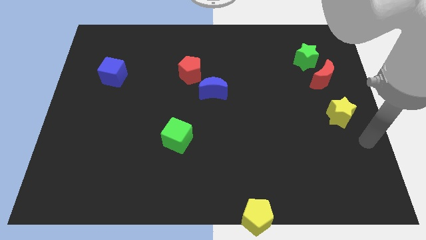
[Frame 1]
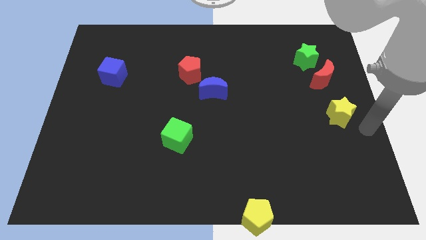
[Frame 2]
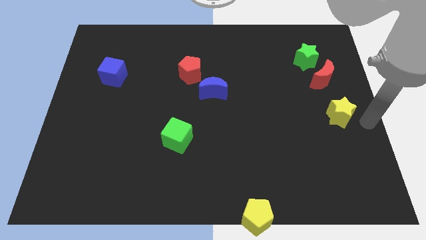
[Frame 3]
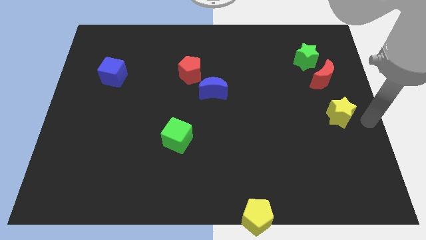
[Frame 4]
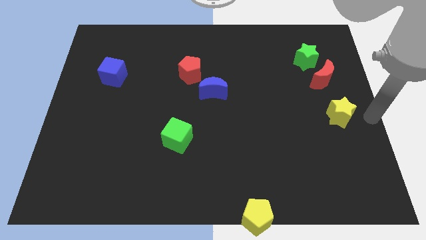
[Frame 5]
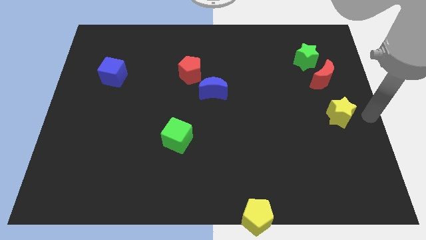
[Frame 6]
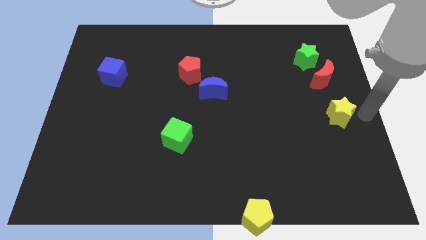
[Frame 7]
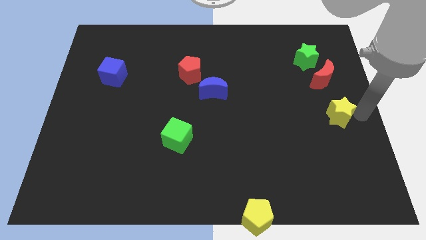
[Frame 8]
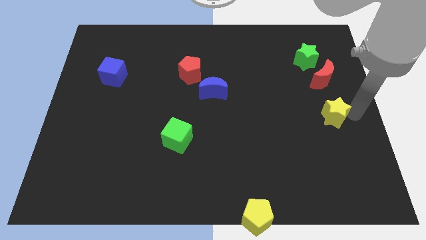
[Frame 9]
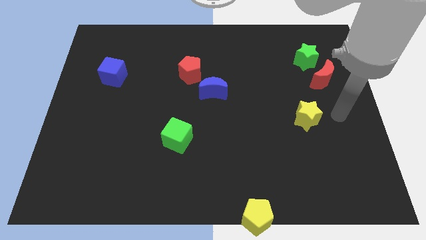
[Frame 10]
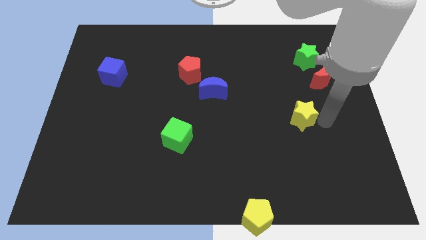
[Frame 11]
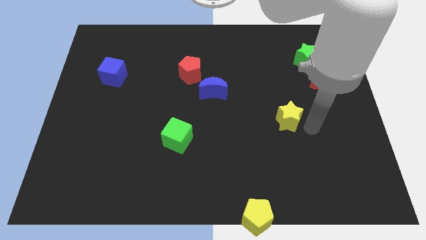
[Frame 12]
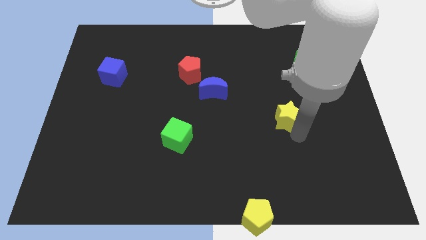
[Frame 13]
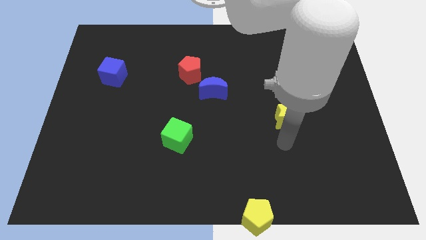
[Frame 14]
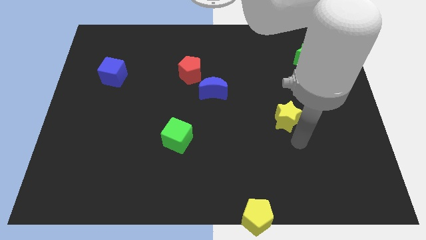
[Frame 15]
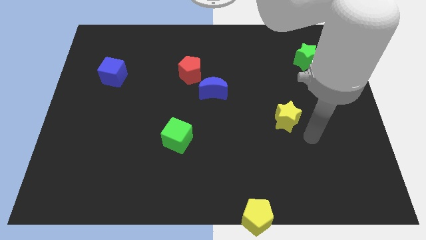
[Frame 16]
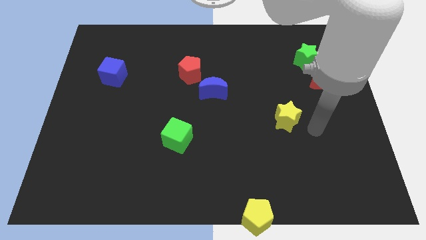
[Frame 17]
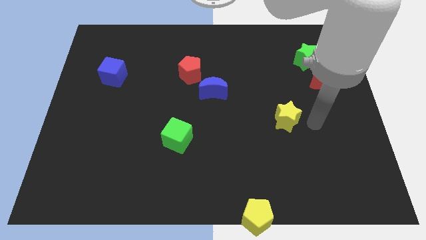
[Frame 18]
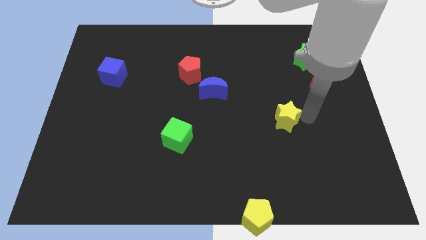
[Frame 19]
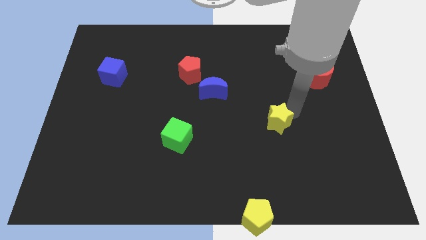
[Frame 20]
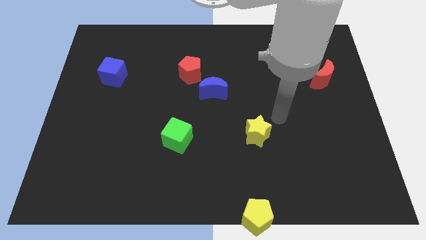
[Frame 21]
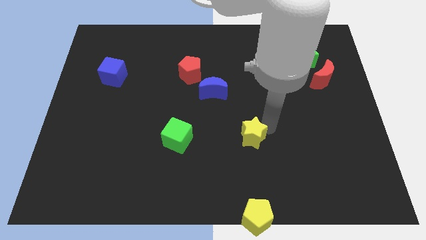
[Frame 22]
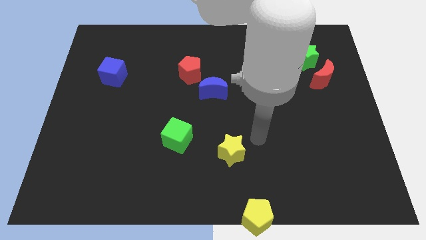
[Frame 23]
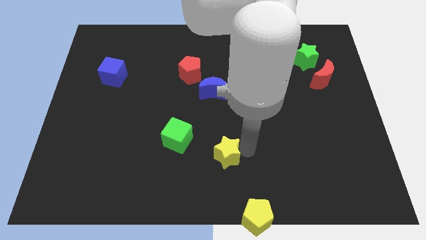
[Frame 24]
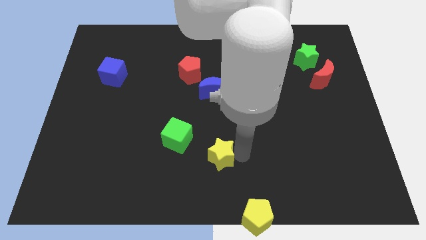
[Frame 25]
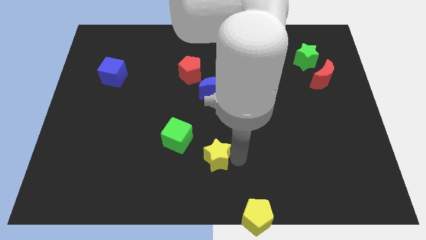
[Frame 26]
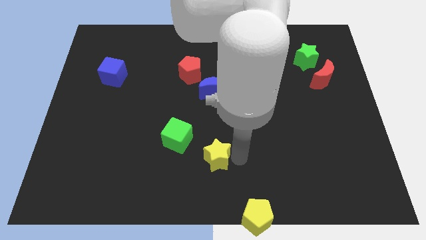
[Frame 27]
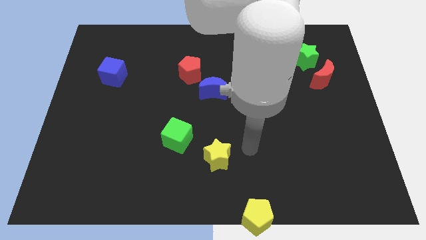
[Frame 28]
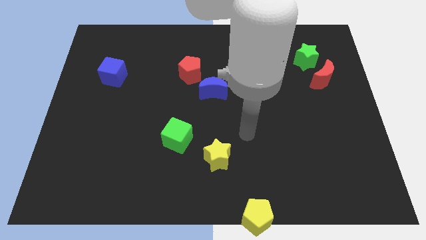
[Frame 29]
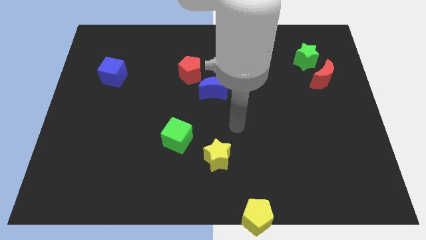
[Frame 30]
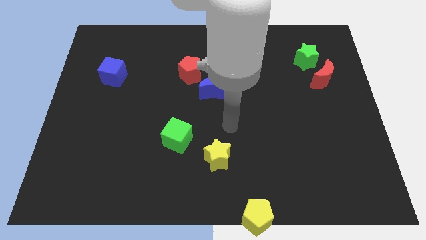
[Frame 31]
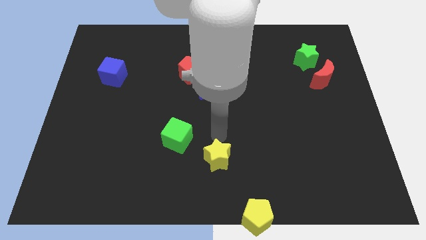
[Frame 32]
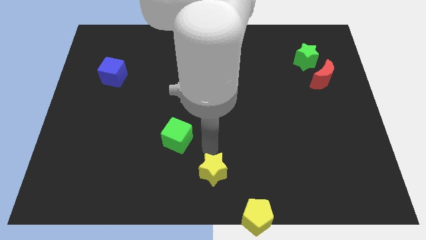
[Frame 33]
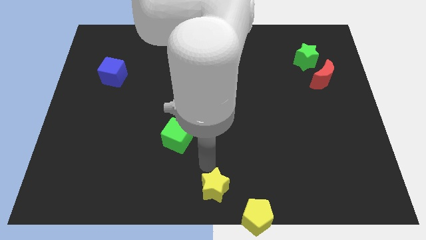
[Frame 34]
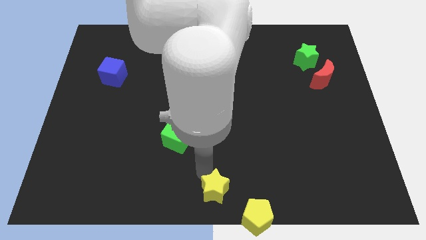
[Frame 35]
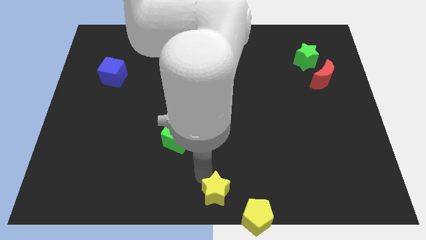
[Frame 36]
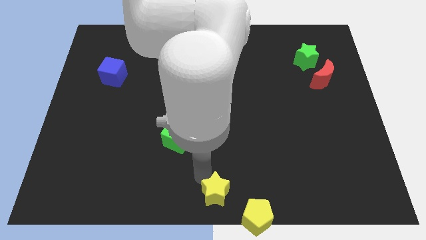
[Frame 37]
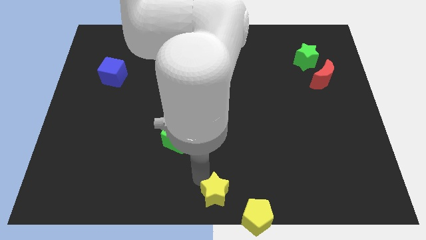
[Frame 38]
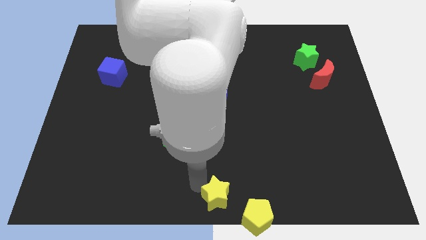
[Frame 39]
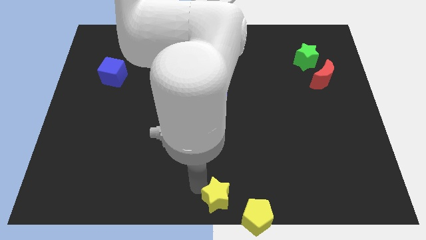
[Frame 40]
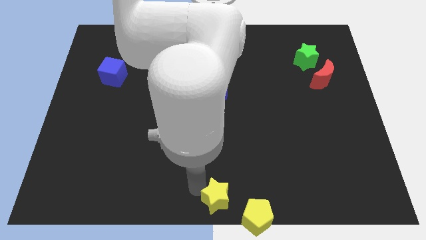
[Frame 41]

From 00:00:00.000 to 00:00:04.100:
push yellow star towards bottom center

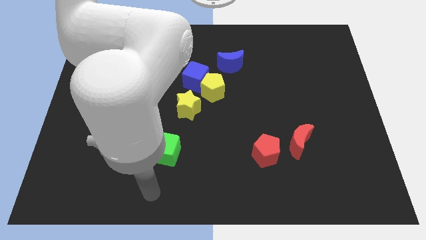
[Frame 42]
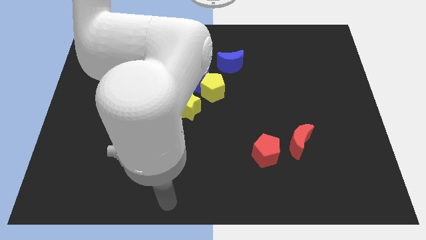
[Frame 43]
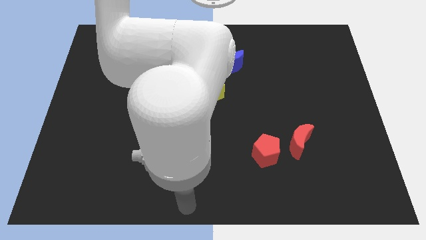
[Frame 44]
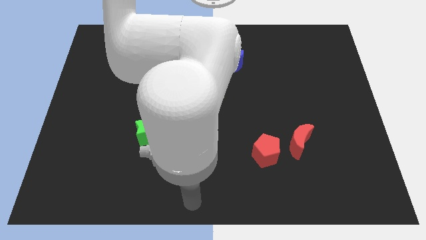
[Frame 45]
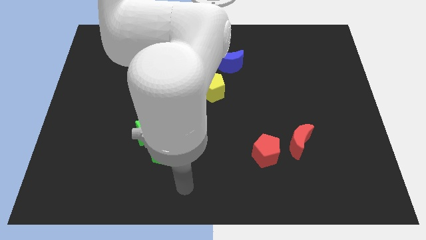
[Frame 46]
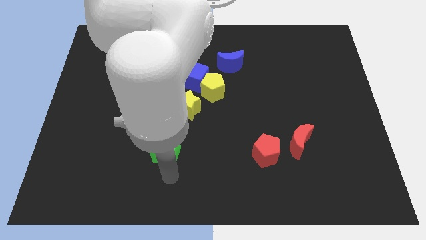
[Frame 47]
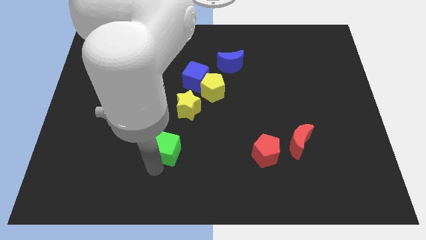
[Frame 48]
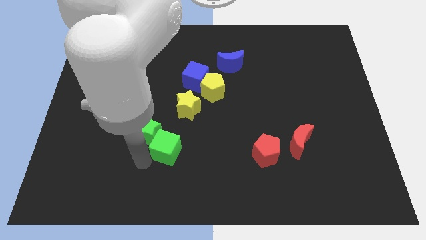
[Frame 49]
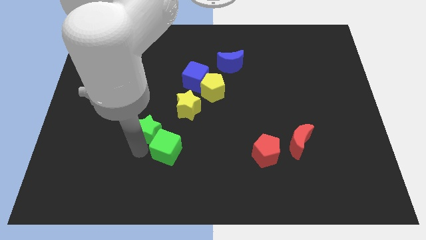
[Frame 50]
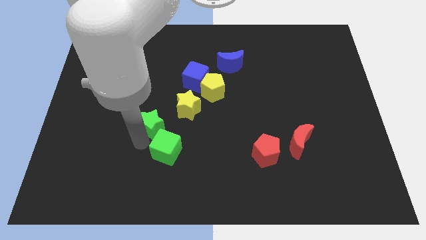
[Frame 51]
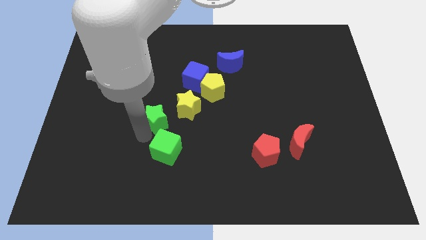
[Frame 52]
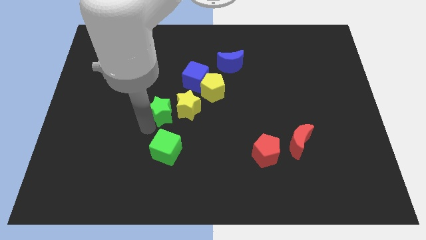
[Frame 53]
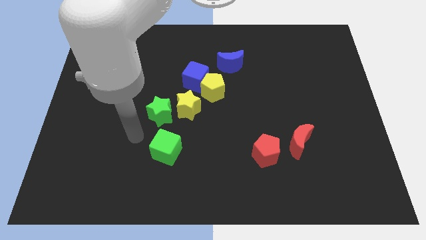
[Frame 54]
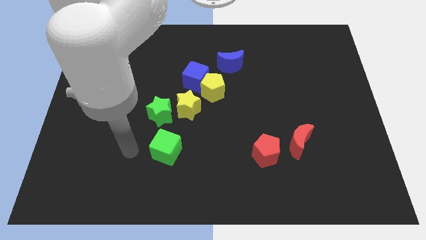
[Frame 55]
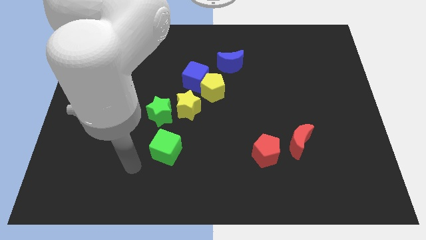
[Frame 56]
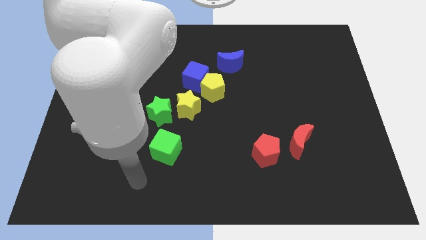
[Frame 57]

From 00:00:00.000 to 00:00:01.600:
push the green star on top of green cube

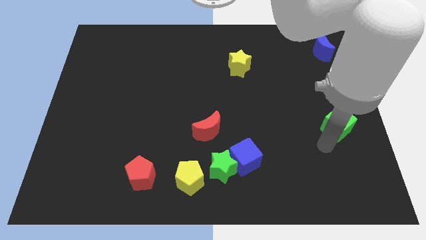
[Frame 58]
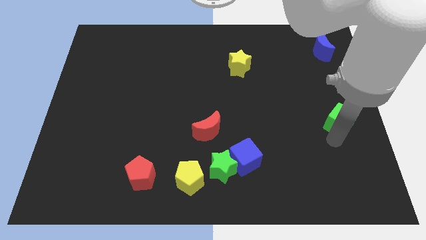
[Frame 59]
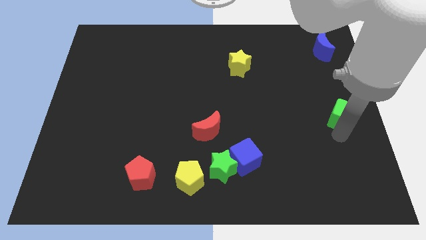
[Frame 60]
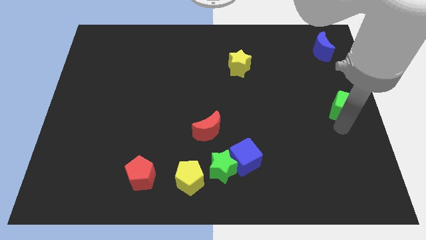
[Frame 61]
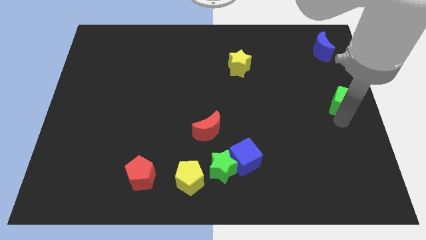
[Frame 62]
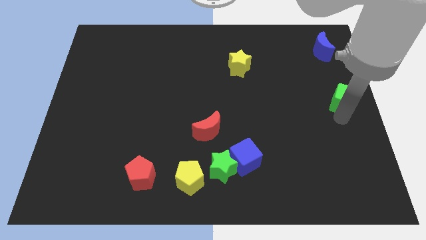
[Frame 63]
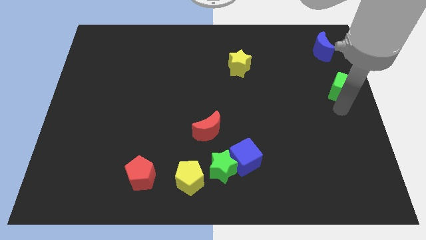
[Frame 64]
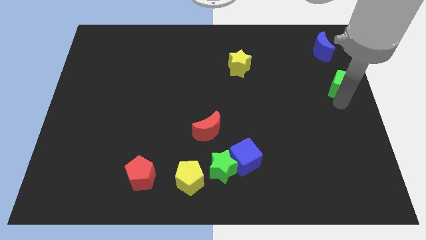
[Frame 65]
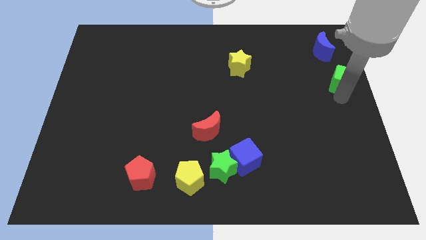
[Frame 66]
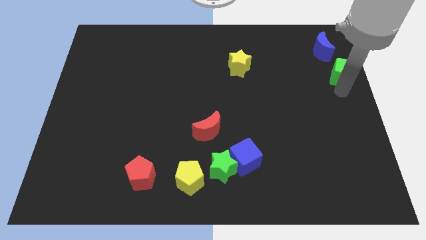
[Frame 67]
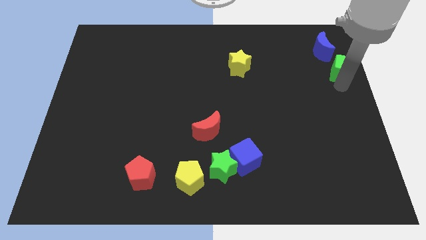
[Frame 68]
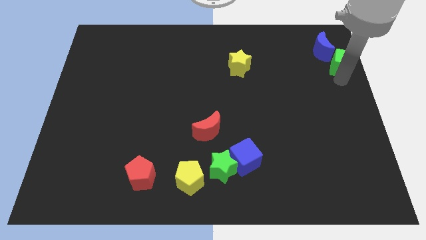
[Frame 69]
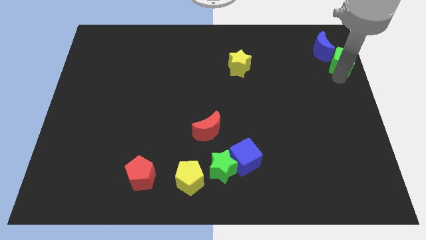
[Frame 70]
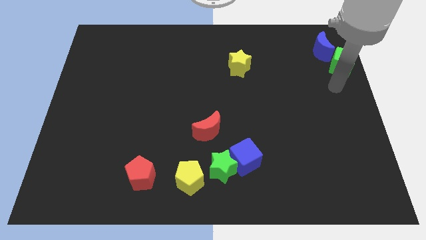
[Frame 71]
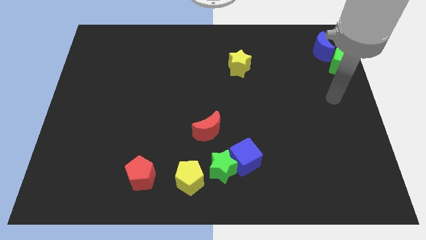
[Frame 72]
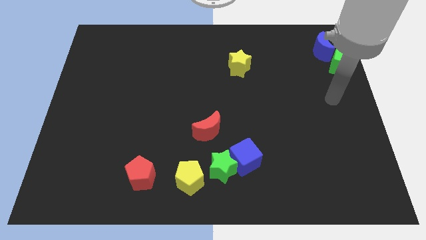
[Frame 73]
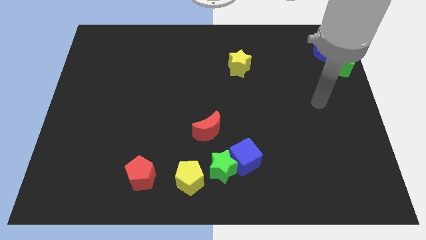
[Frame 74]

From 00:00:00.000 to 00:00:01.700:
push the green cube towards the blue crescent

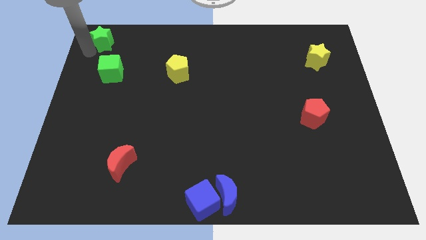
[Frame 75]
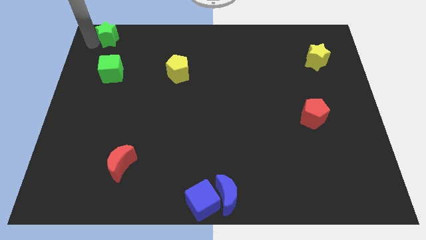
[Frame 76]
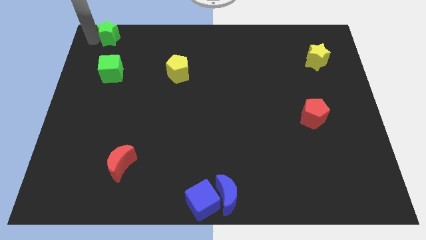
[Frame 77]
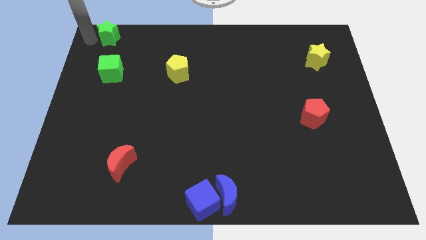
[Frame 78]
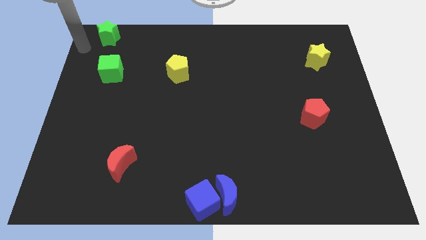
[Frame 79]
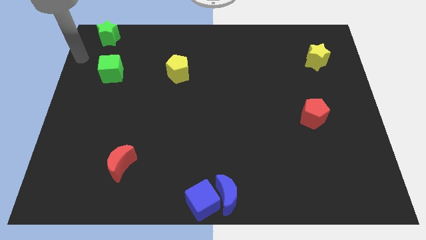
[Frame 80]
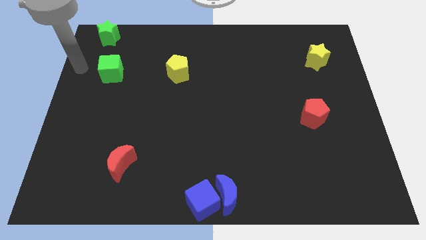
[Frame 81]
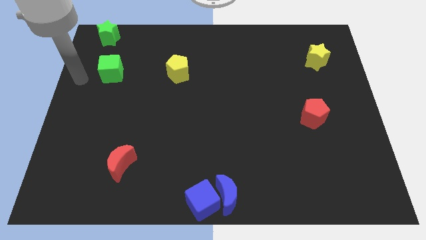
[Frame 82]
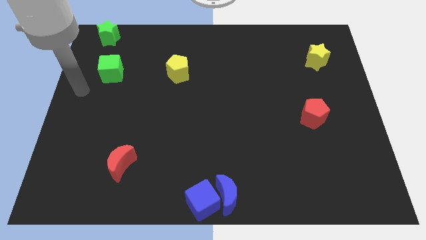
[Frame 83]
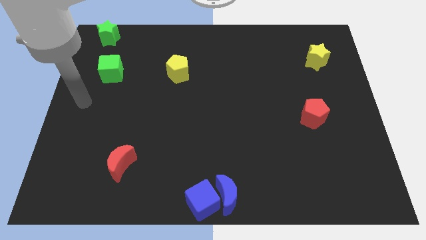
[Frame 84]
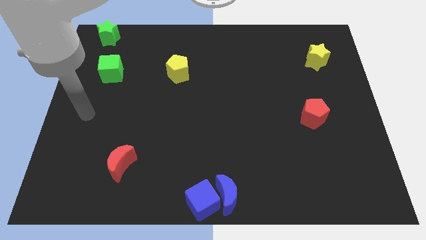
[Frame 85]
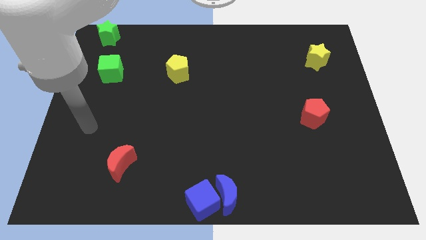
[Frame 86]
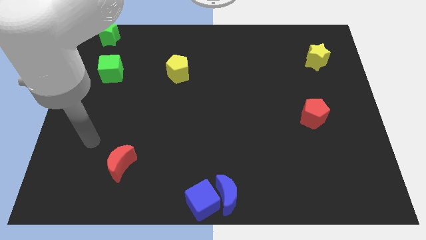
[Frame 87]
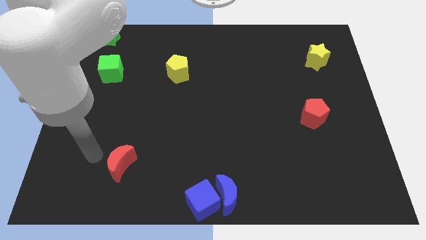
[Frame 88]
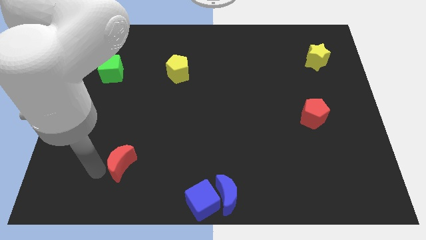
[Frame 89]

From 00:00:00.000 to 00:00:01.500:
move the arm towards the bottom left of red moon
